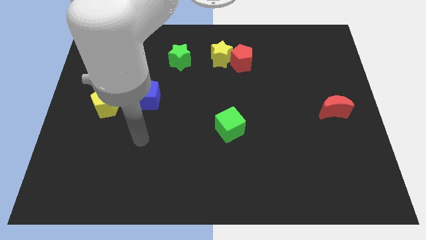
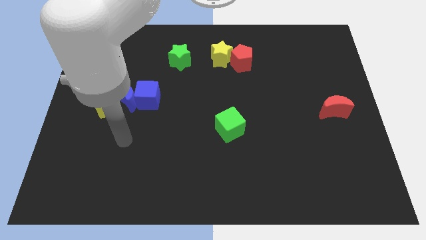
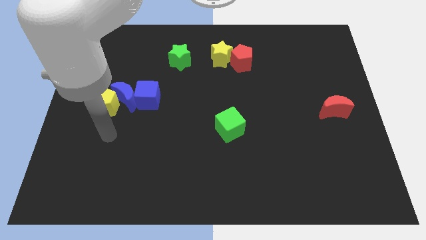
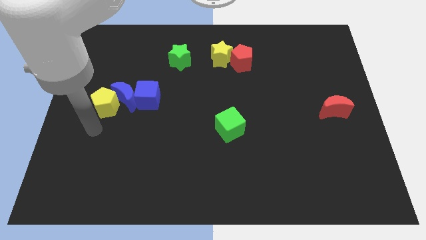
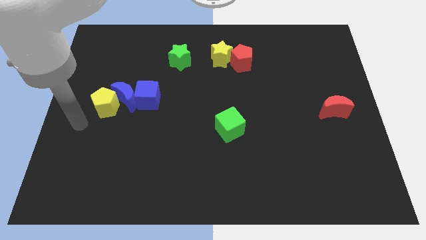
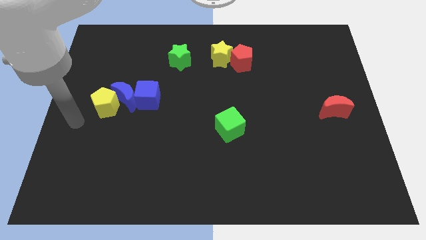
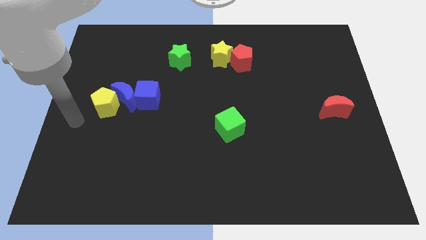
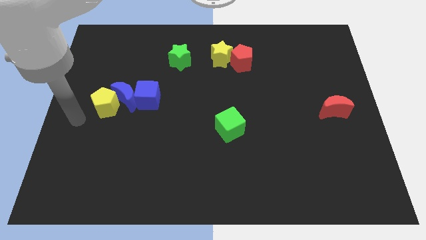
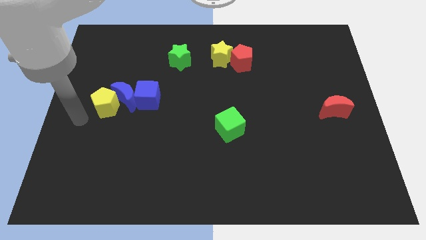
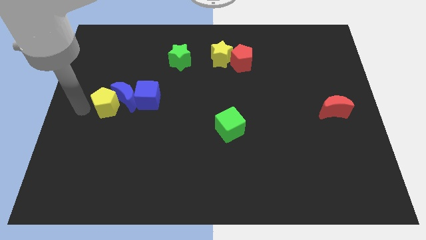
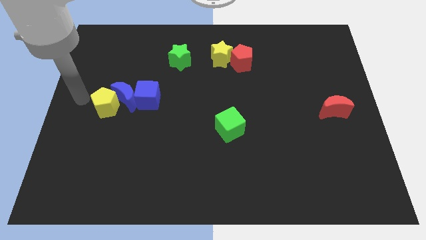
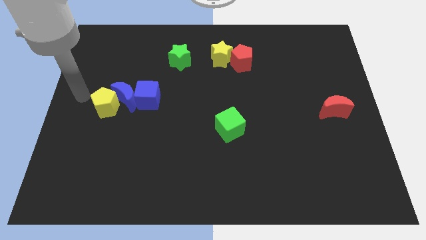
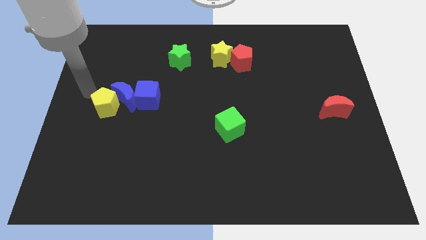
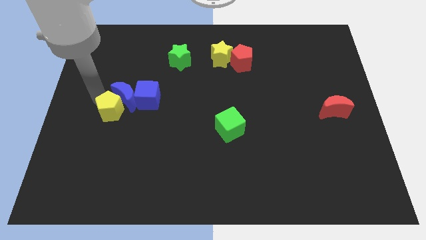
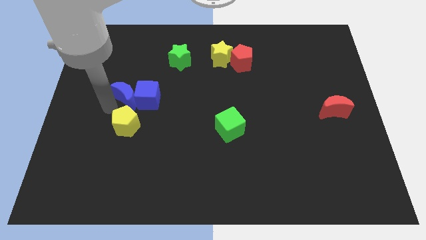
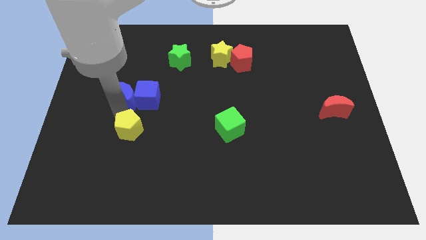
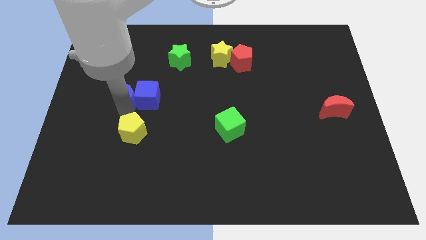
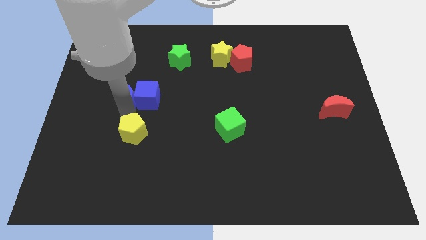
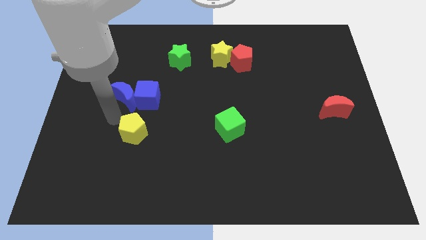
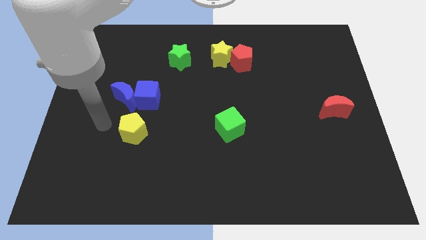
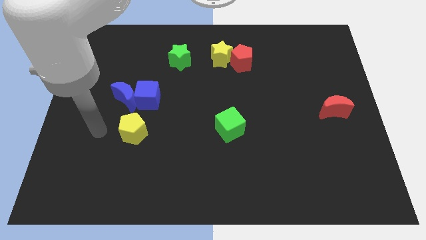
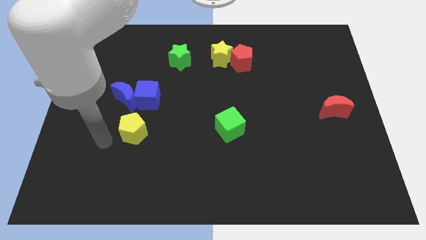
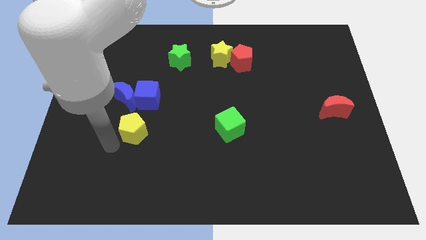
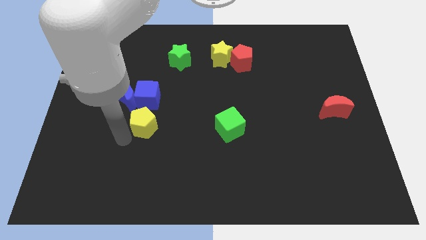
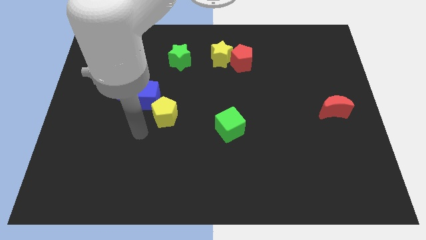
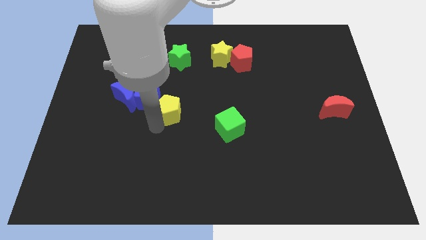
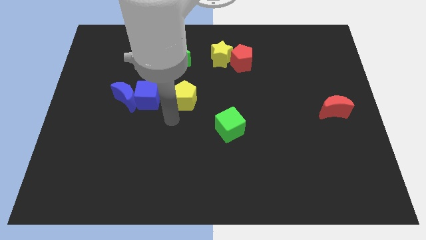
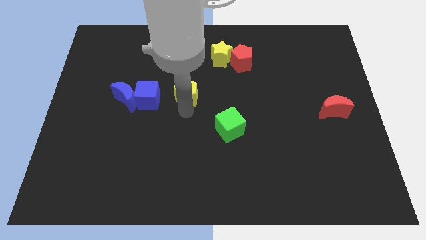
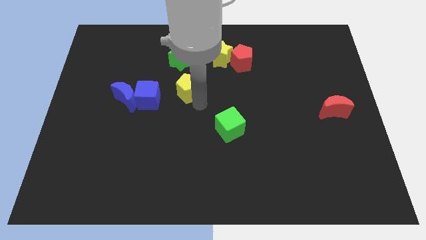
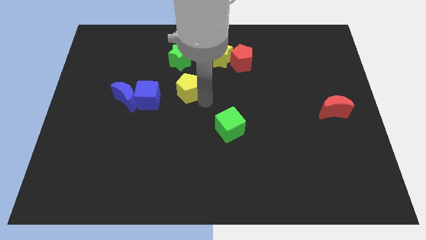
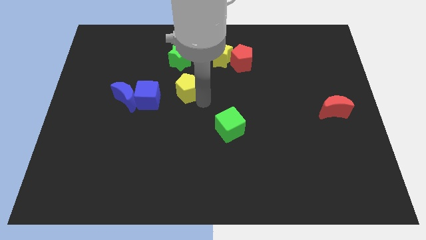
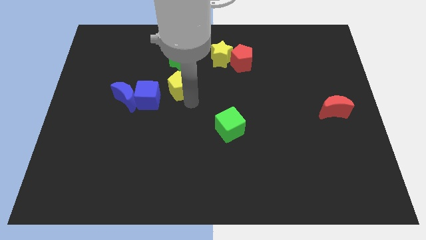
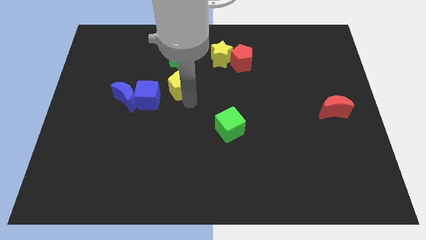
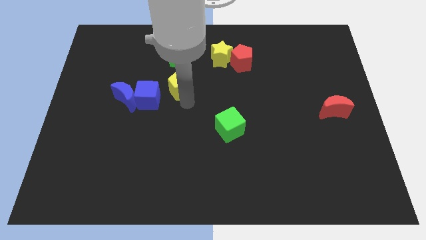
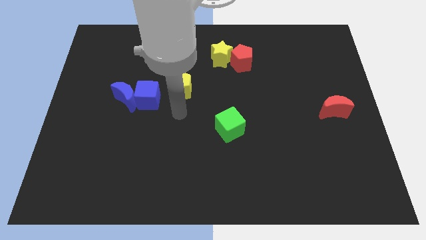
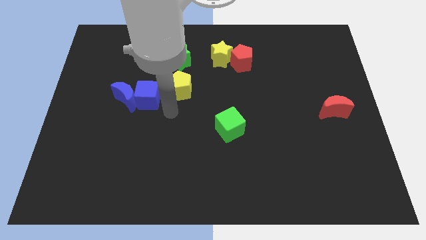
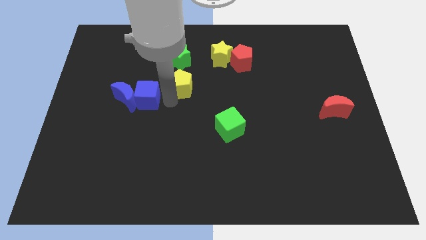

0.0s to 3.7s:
move the yellow pentagon below the green star

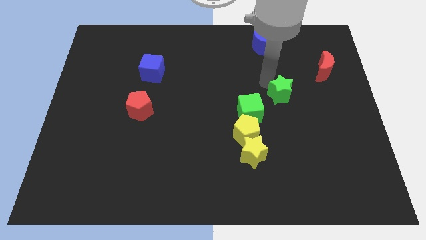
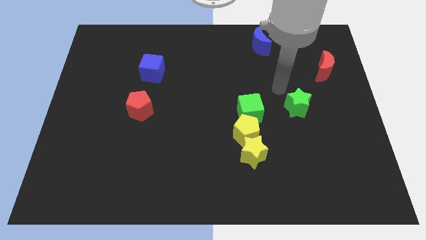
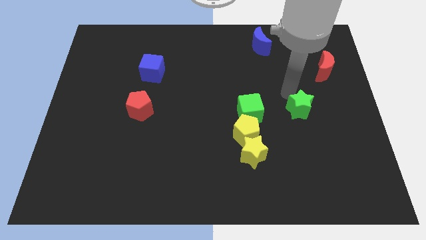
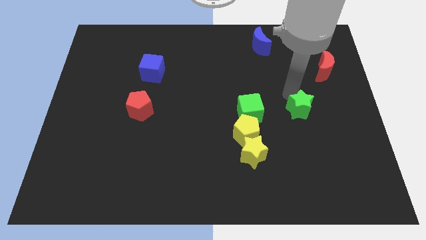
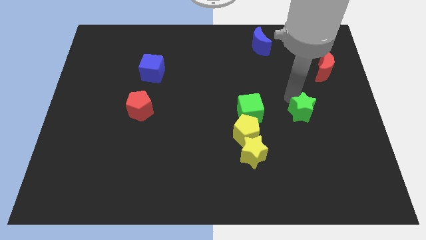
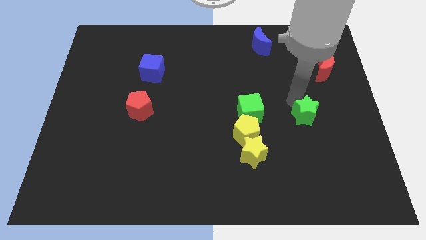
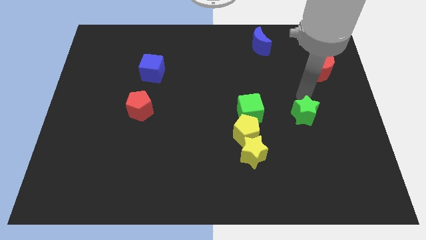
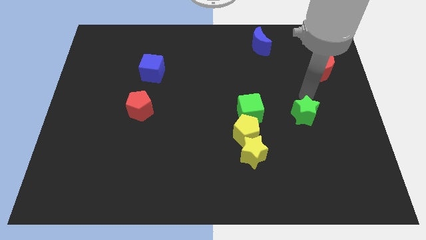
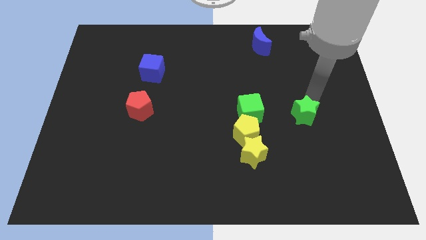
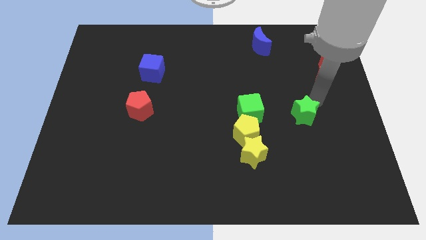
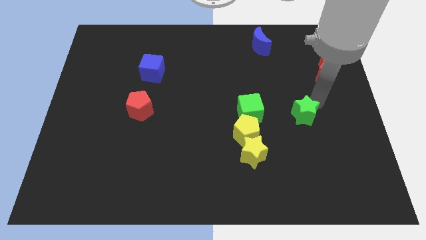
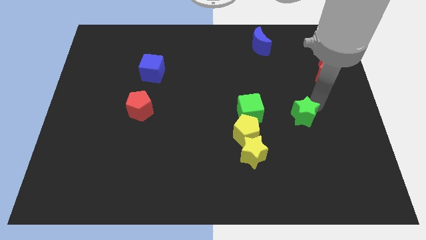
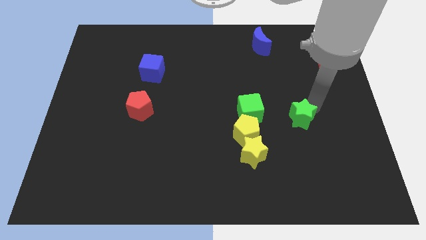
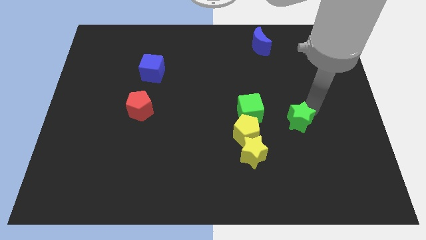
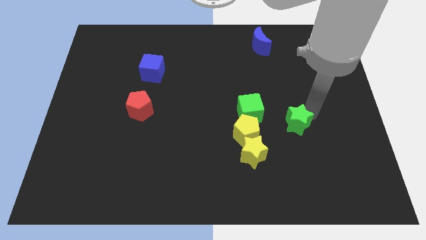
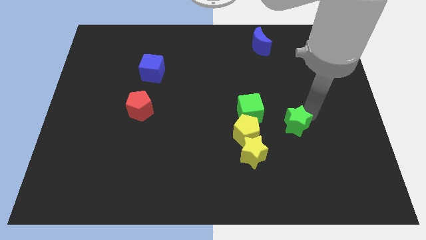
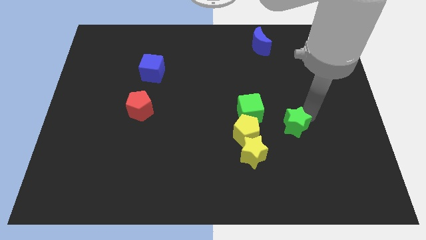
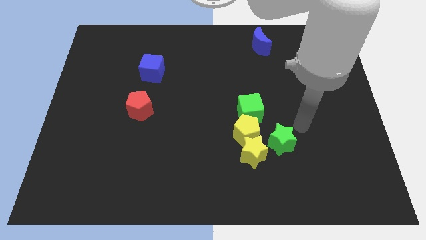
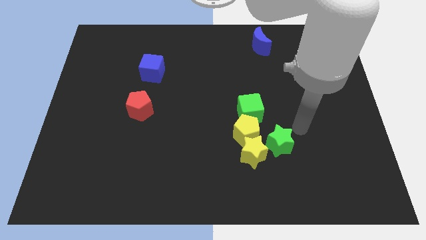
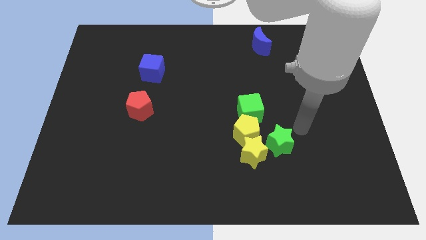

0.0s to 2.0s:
slide the green star close to the yellow star

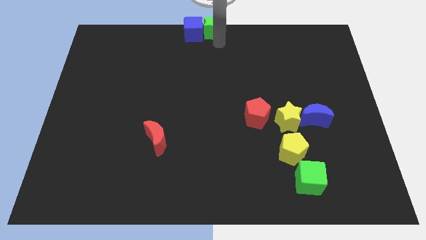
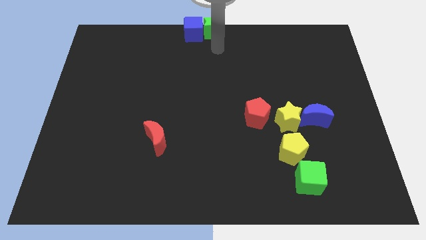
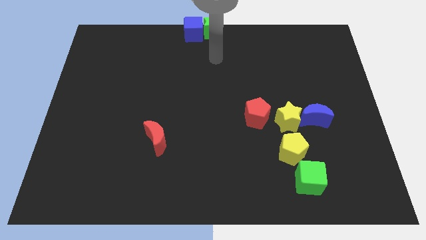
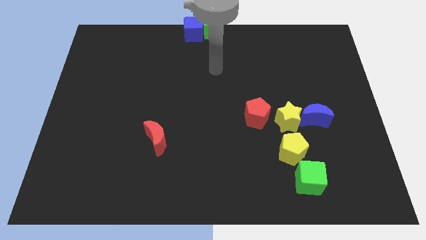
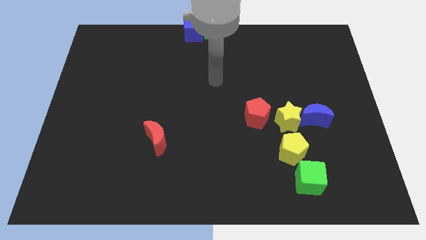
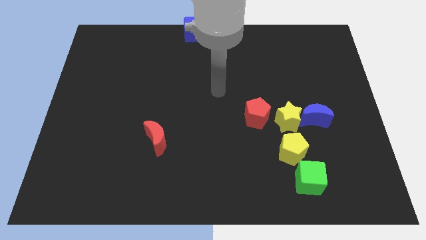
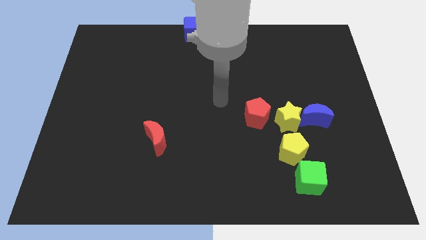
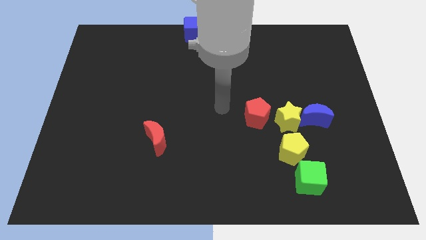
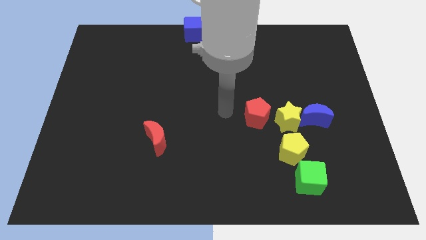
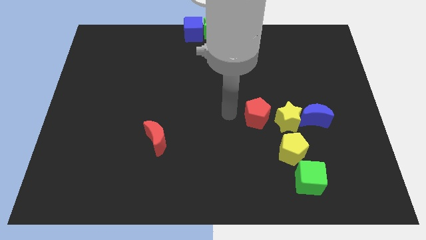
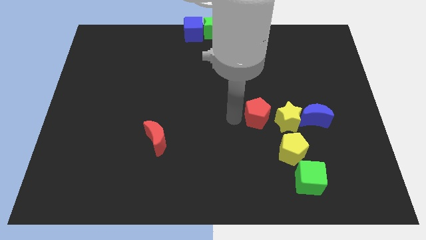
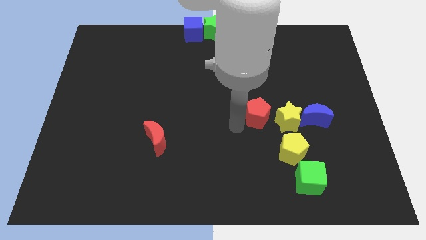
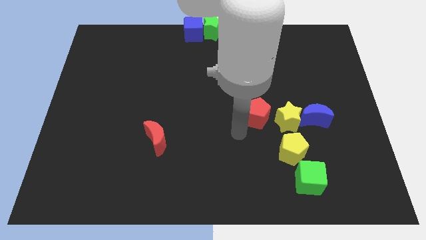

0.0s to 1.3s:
move your arm away from green star

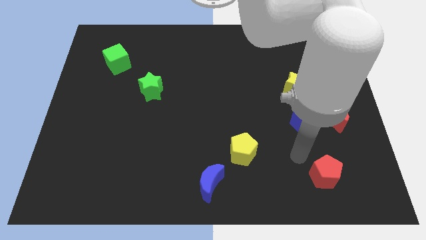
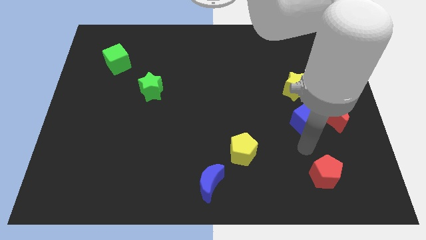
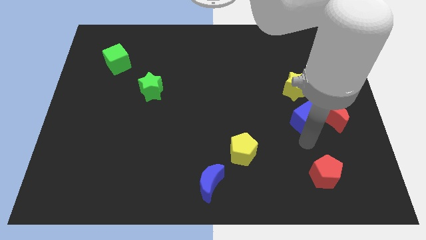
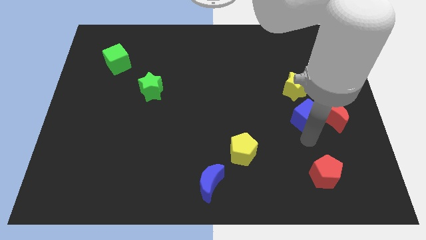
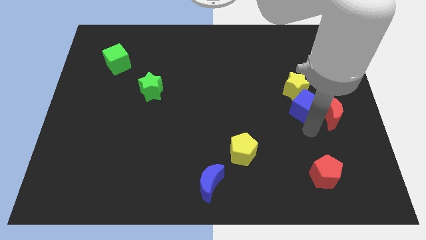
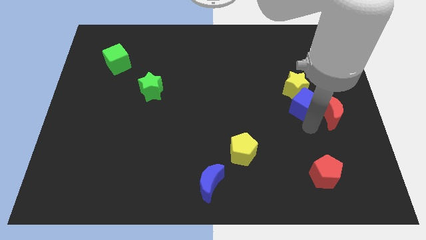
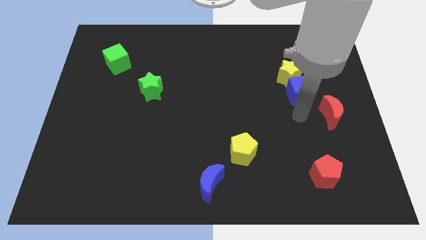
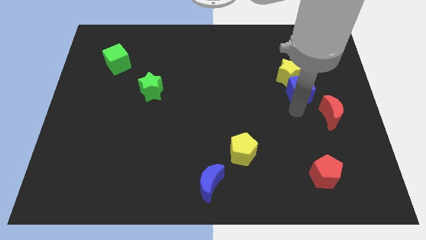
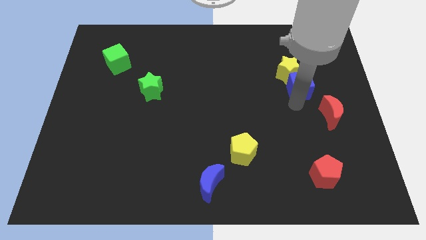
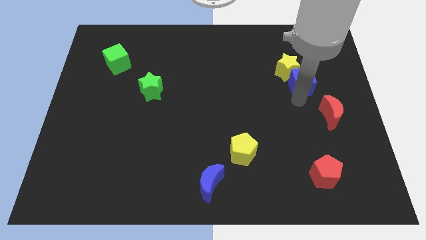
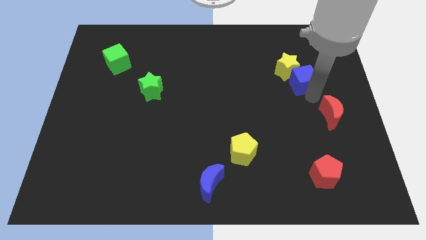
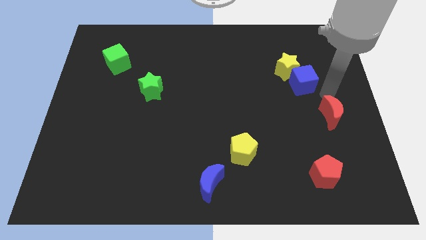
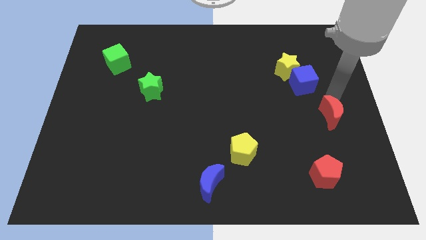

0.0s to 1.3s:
push blue cube slightly towards up

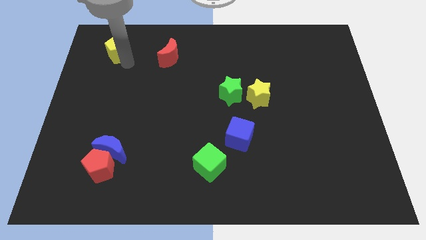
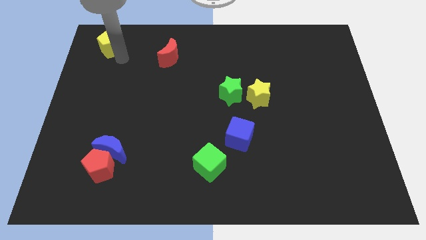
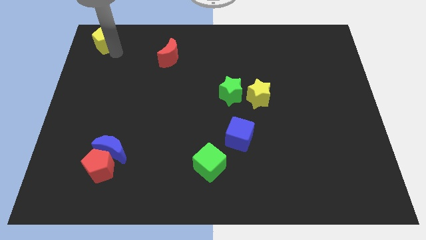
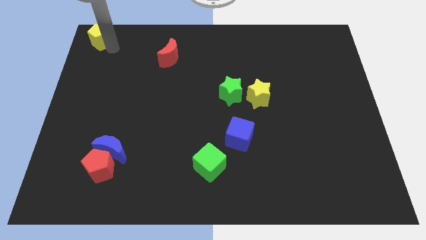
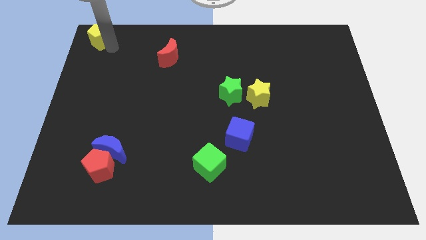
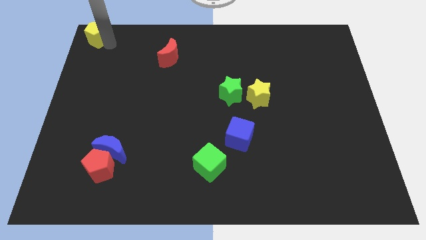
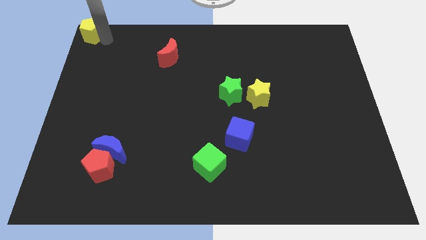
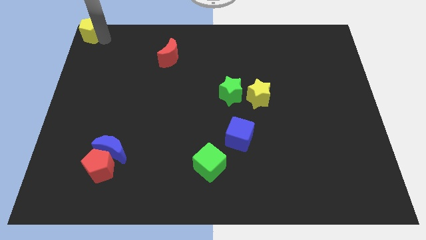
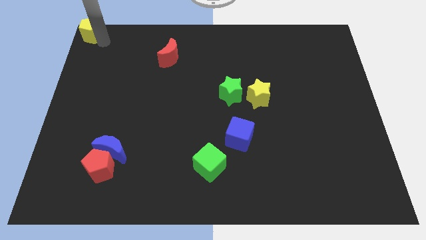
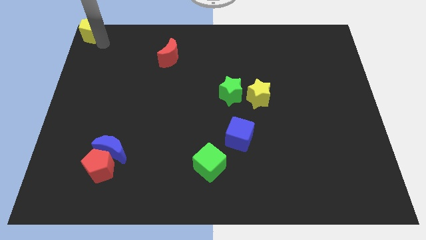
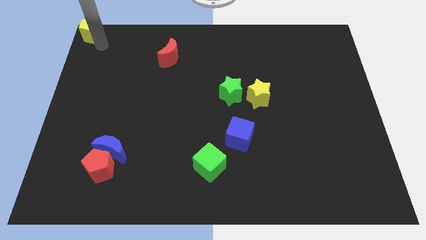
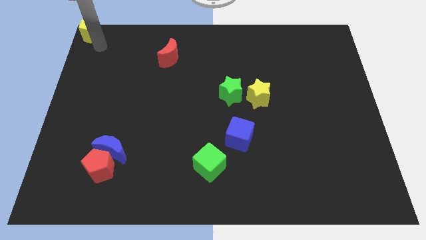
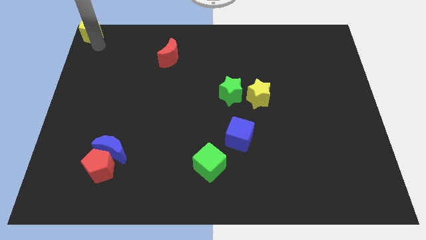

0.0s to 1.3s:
put the yellow pentagon diagonally top left to the blue moon
